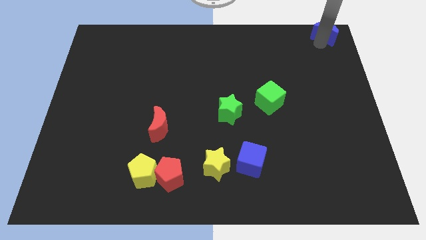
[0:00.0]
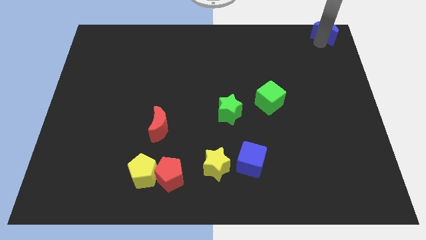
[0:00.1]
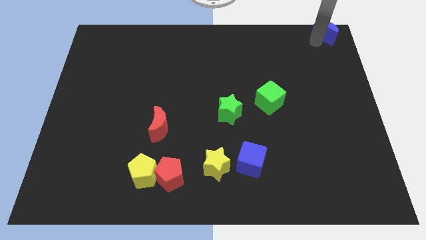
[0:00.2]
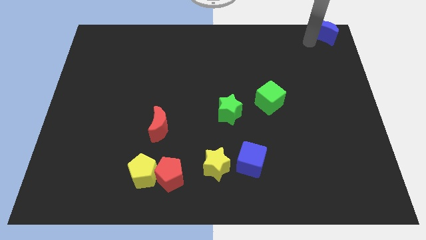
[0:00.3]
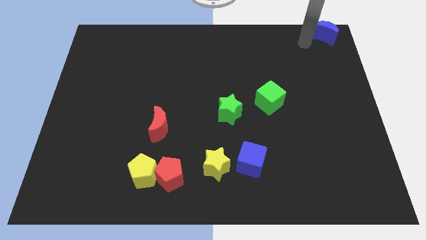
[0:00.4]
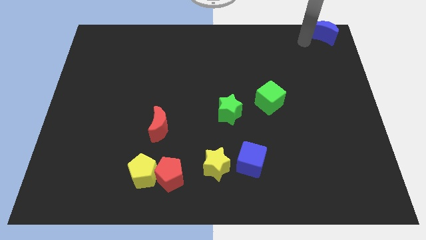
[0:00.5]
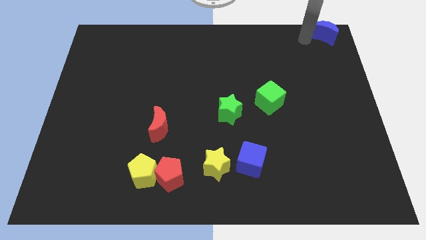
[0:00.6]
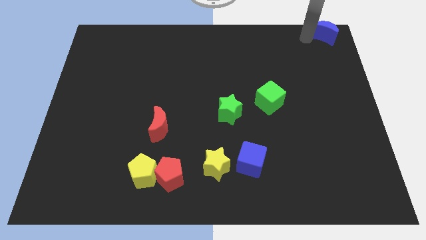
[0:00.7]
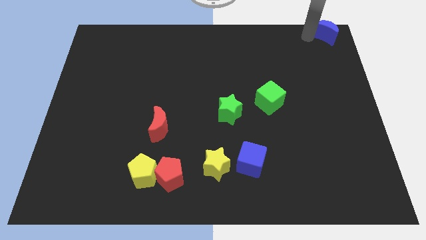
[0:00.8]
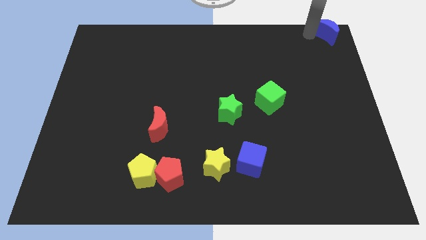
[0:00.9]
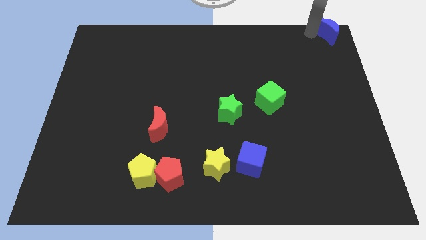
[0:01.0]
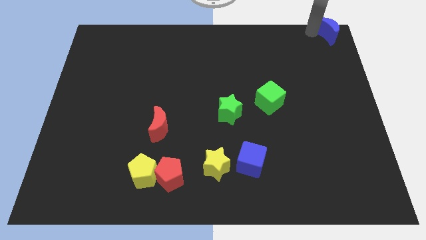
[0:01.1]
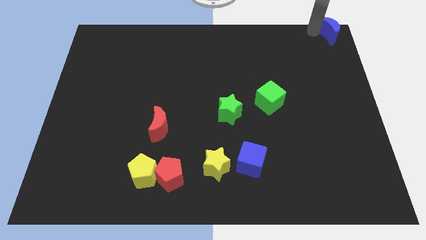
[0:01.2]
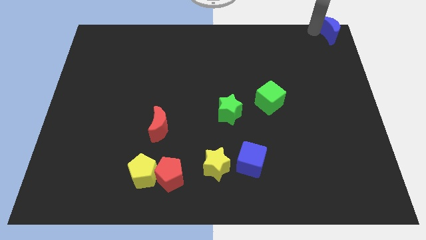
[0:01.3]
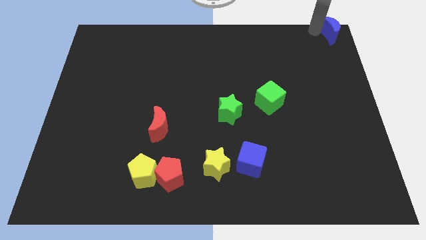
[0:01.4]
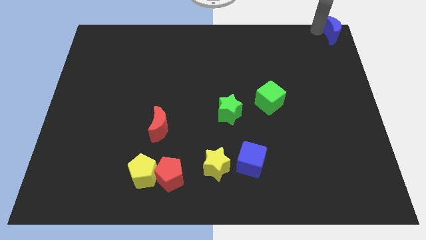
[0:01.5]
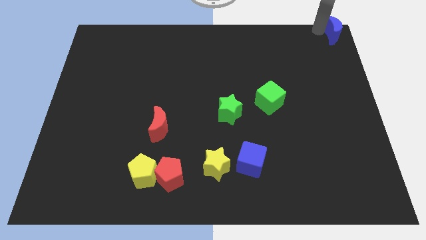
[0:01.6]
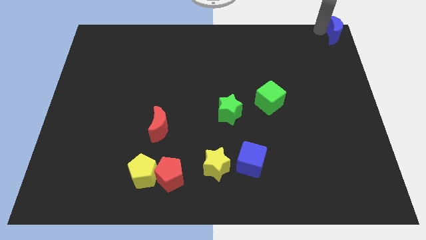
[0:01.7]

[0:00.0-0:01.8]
place blue moon at top right corner

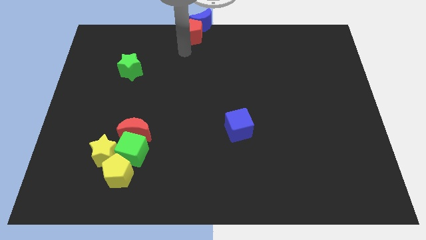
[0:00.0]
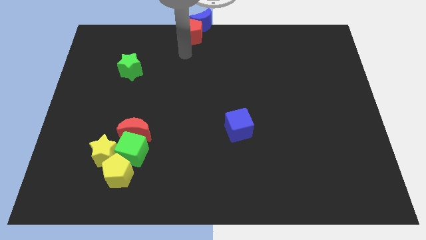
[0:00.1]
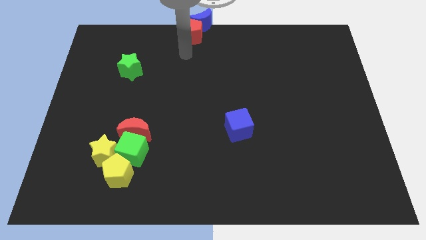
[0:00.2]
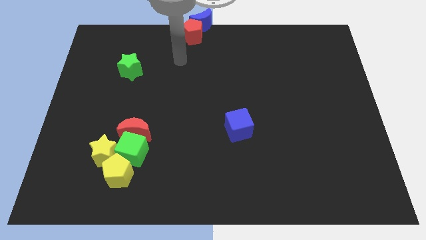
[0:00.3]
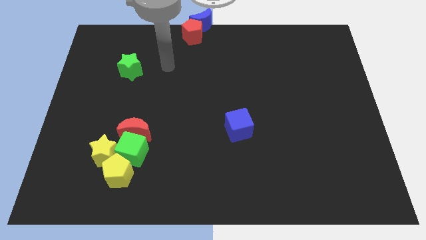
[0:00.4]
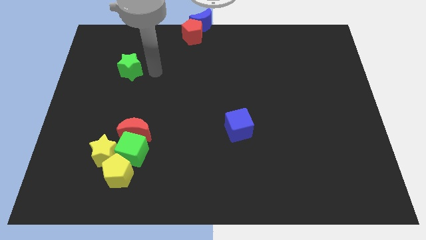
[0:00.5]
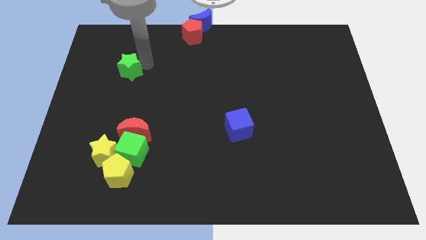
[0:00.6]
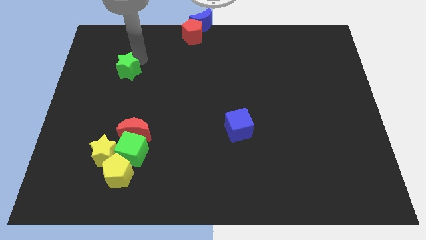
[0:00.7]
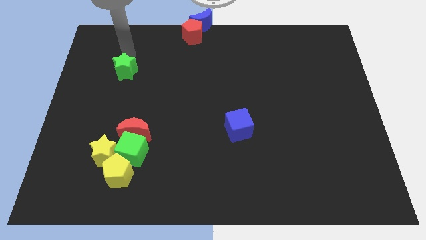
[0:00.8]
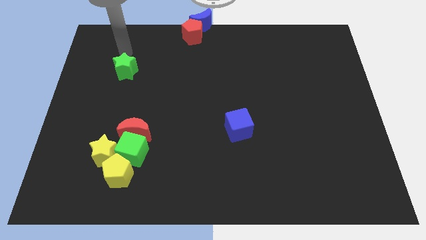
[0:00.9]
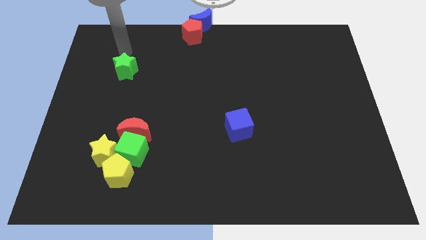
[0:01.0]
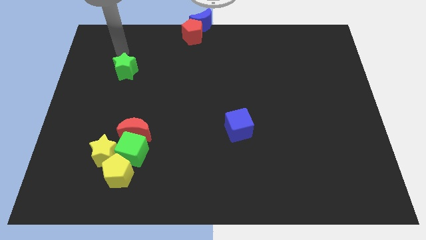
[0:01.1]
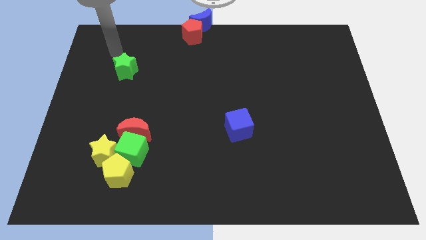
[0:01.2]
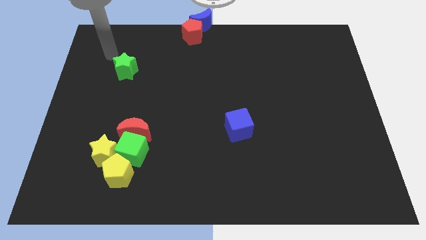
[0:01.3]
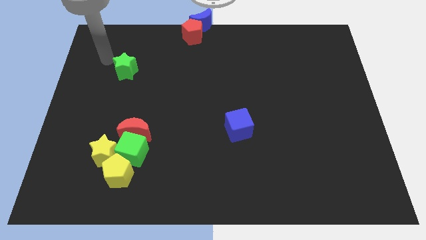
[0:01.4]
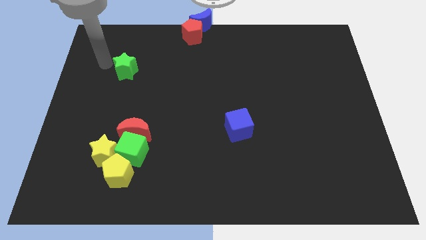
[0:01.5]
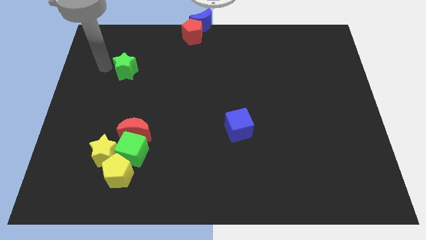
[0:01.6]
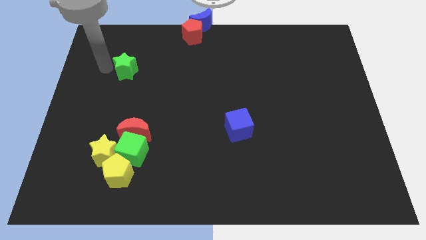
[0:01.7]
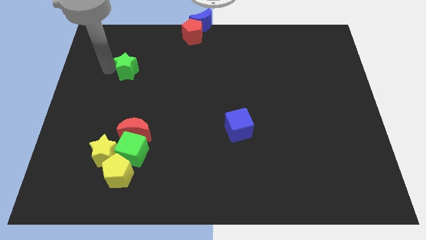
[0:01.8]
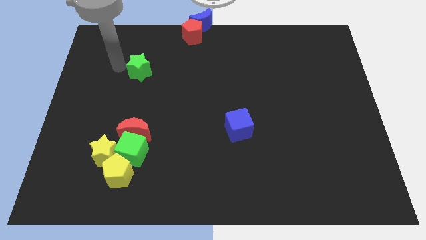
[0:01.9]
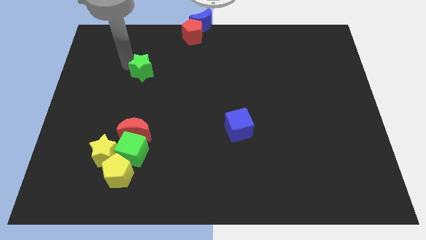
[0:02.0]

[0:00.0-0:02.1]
push the green star vertically above the red moon

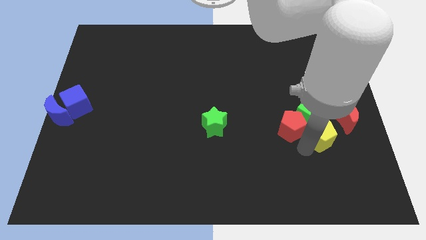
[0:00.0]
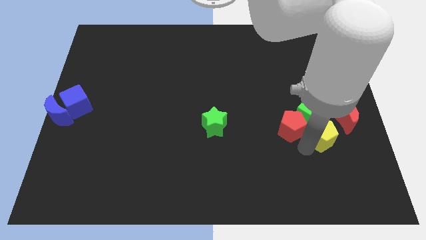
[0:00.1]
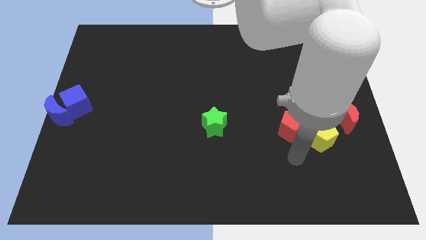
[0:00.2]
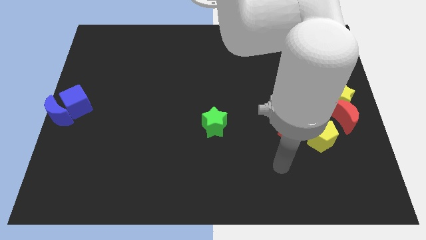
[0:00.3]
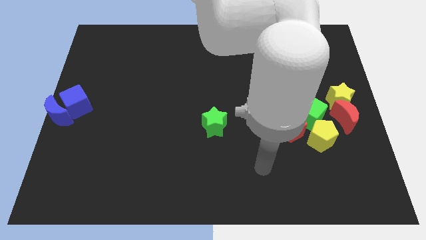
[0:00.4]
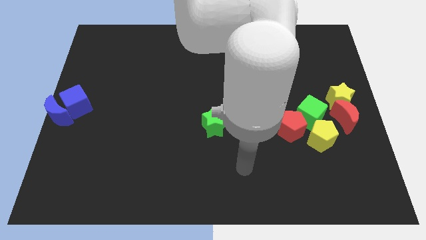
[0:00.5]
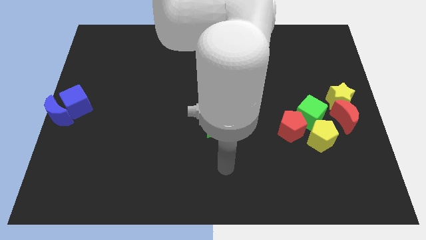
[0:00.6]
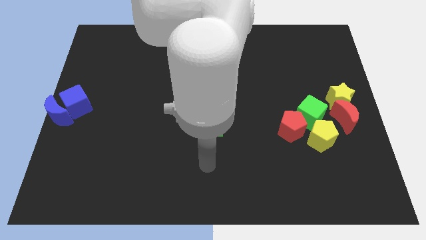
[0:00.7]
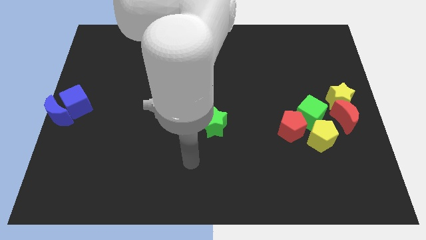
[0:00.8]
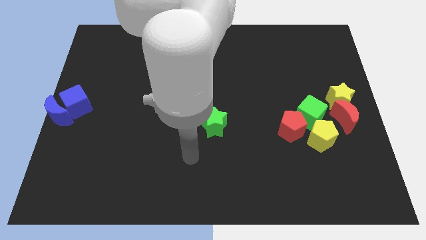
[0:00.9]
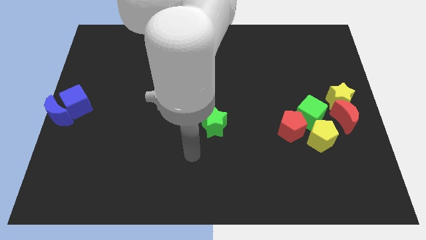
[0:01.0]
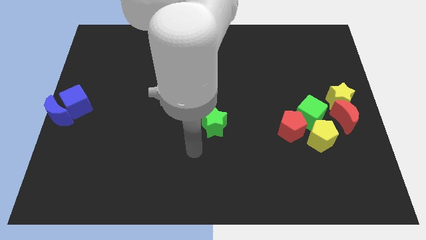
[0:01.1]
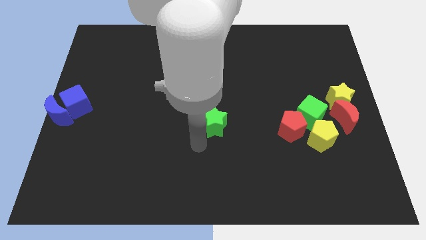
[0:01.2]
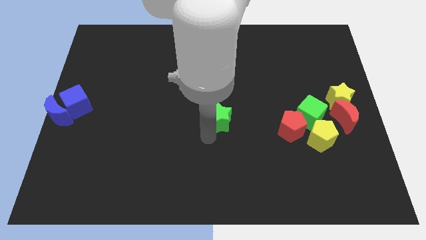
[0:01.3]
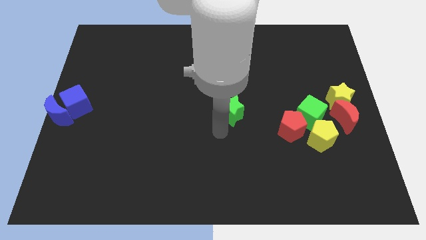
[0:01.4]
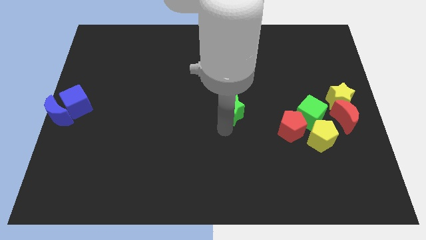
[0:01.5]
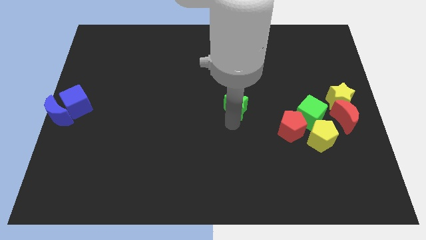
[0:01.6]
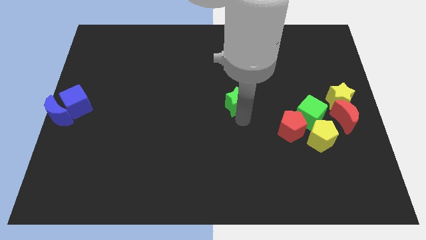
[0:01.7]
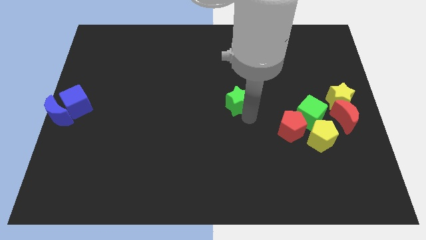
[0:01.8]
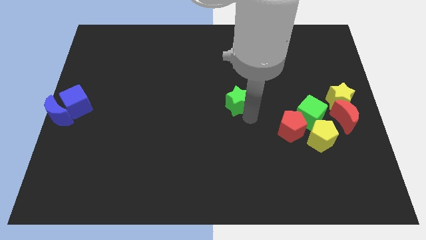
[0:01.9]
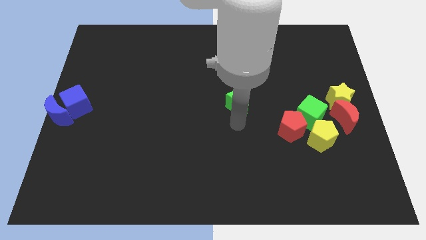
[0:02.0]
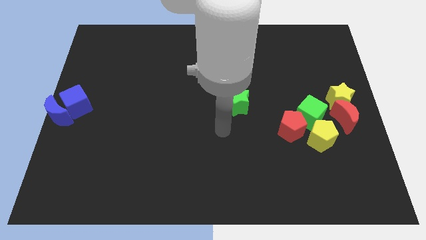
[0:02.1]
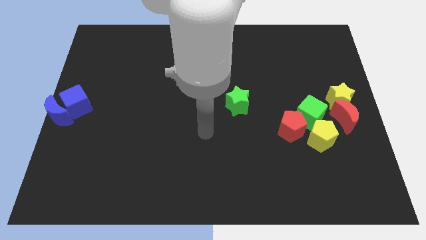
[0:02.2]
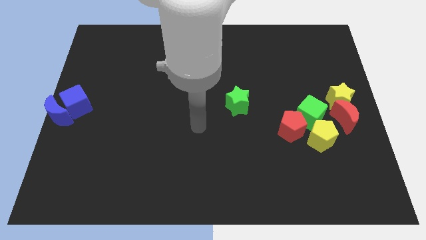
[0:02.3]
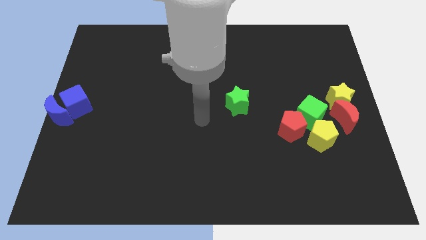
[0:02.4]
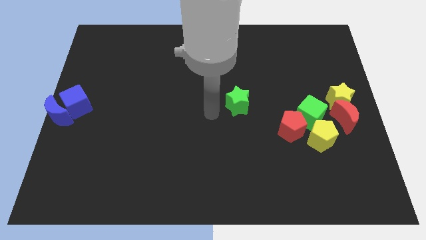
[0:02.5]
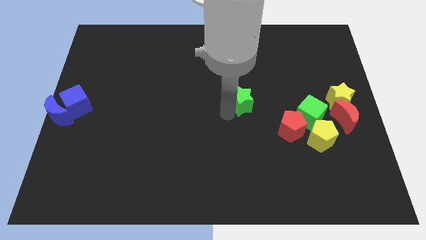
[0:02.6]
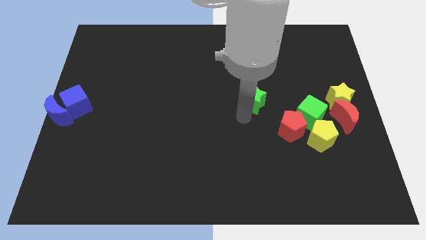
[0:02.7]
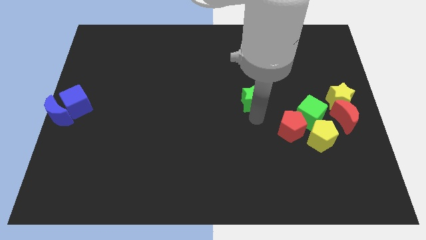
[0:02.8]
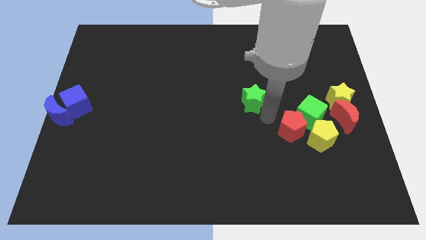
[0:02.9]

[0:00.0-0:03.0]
push the green star upwards

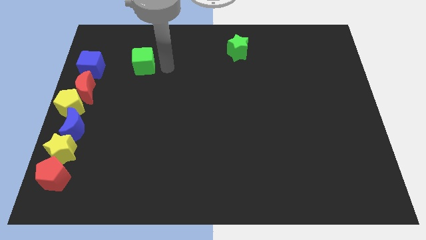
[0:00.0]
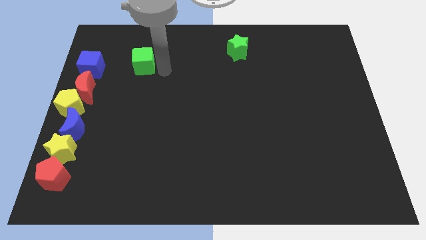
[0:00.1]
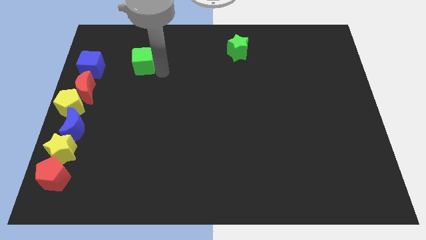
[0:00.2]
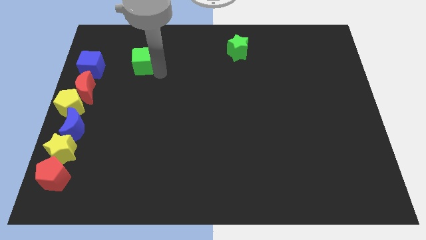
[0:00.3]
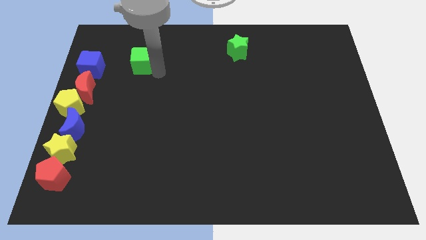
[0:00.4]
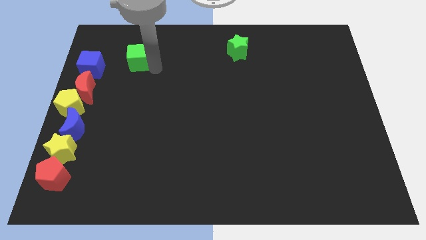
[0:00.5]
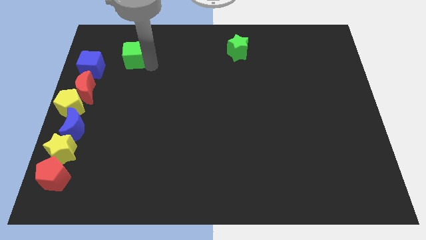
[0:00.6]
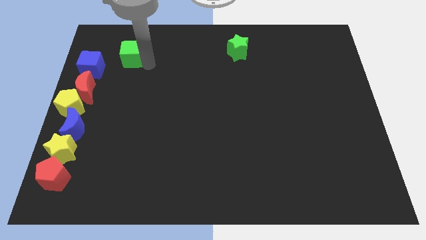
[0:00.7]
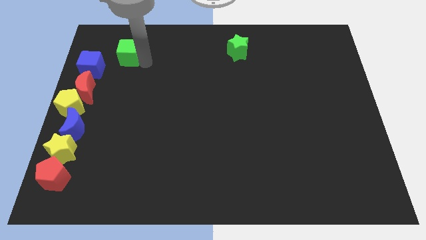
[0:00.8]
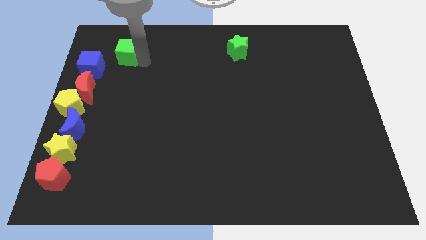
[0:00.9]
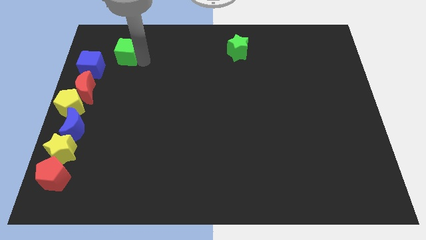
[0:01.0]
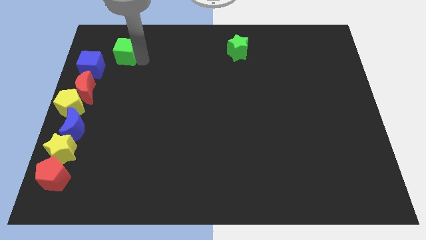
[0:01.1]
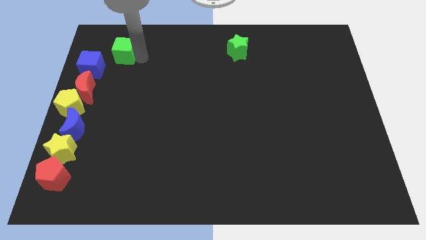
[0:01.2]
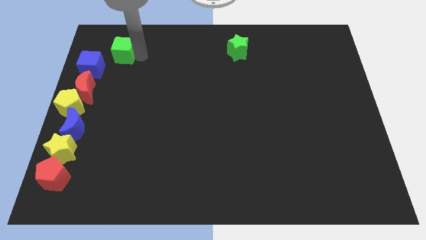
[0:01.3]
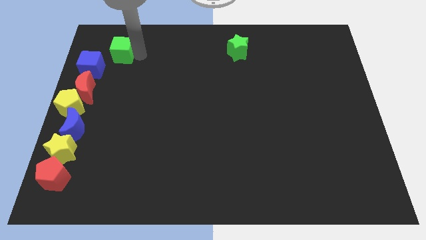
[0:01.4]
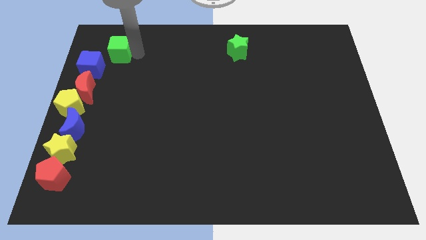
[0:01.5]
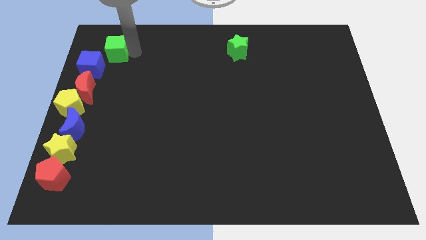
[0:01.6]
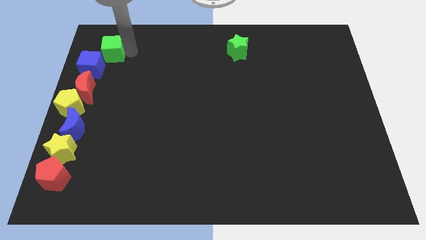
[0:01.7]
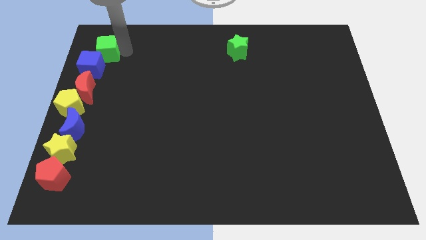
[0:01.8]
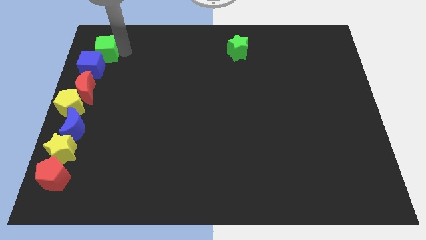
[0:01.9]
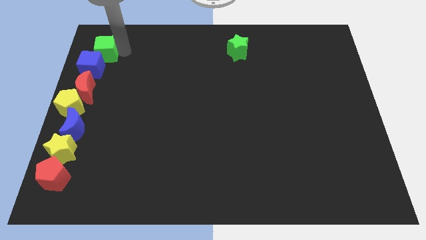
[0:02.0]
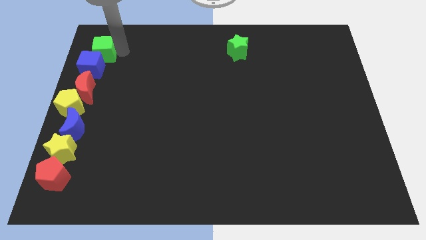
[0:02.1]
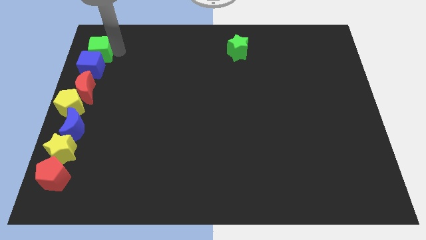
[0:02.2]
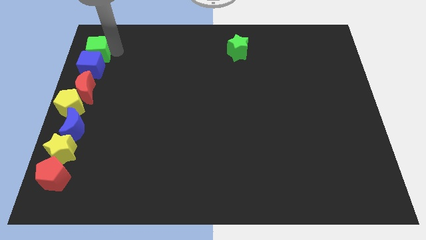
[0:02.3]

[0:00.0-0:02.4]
move the green cube to the top of the blue cube
